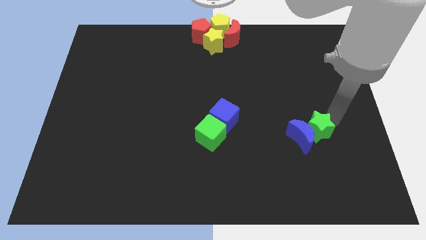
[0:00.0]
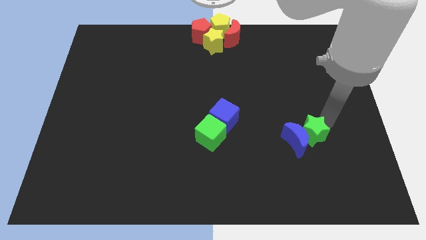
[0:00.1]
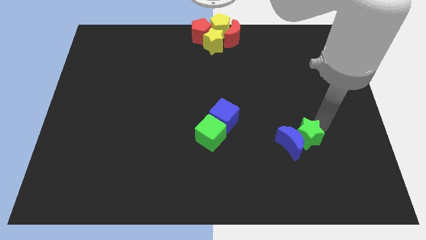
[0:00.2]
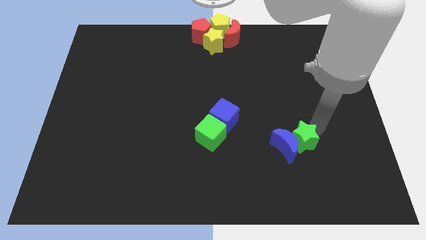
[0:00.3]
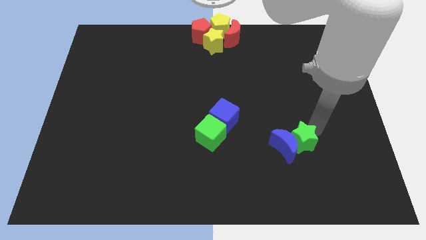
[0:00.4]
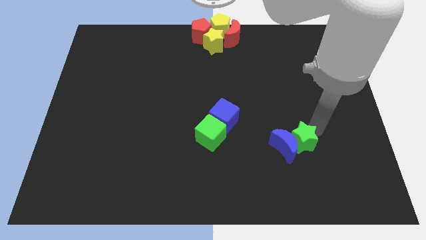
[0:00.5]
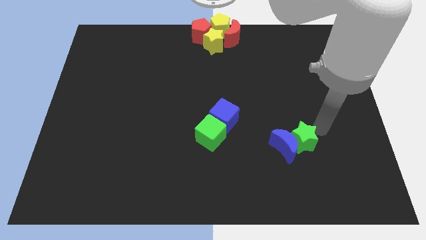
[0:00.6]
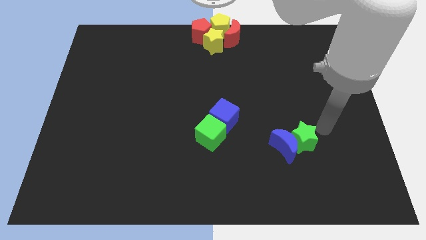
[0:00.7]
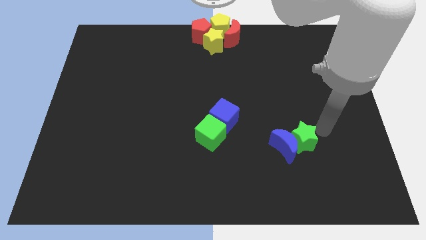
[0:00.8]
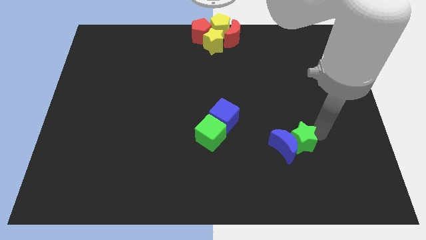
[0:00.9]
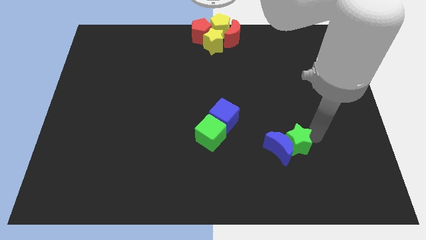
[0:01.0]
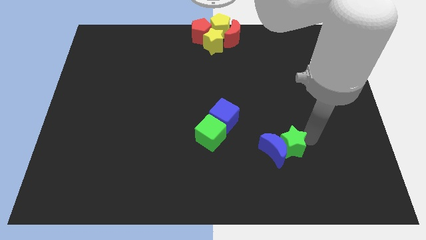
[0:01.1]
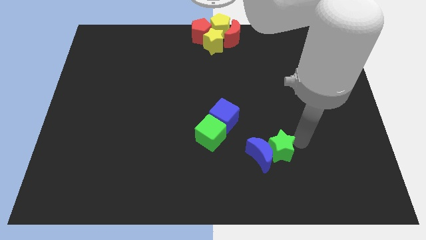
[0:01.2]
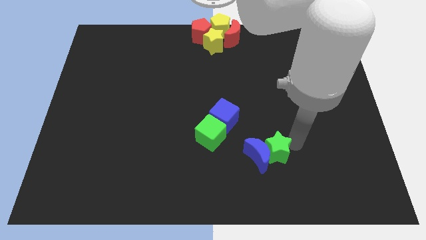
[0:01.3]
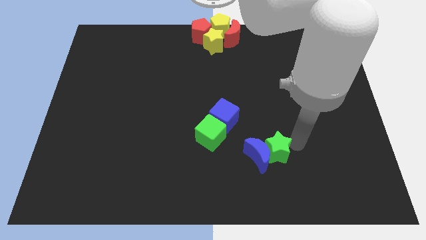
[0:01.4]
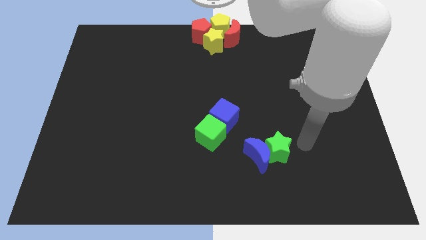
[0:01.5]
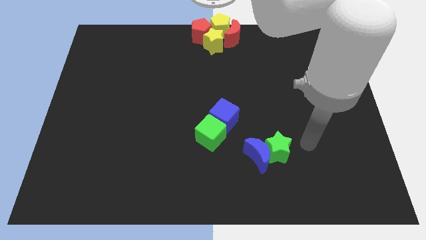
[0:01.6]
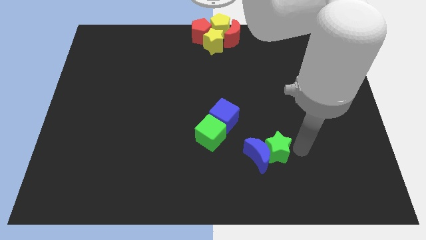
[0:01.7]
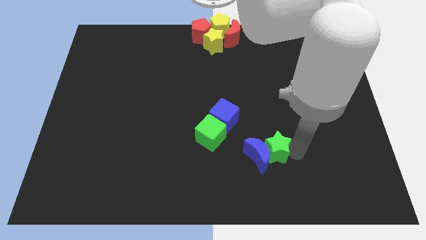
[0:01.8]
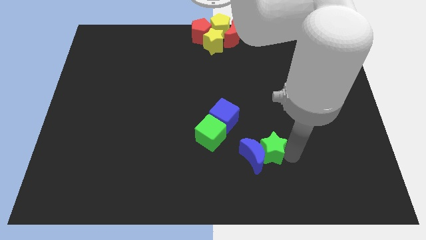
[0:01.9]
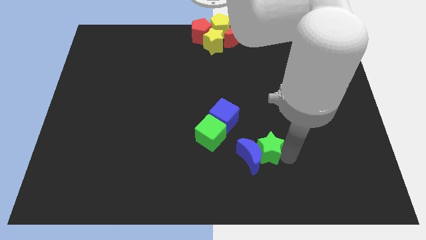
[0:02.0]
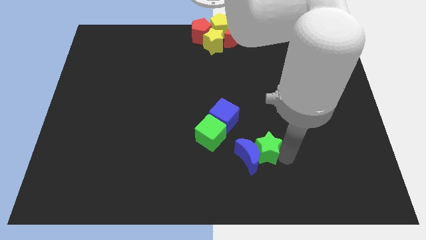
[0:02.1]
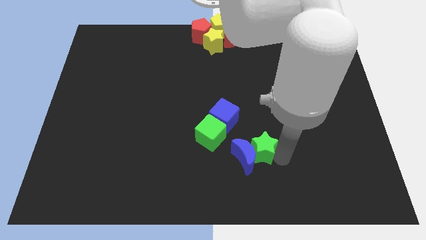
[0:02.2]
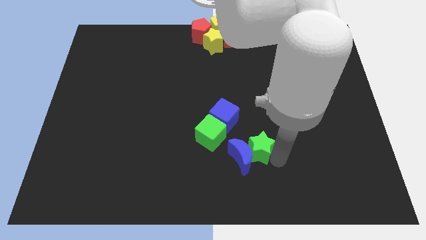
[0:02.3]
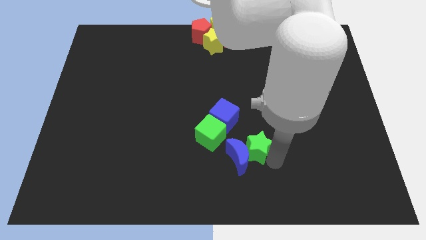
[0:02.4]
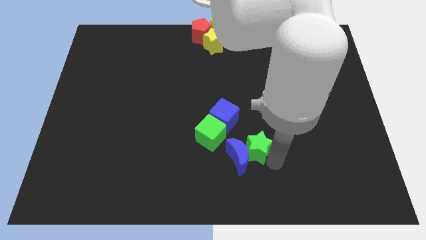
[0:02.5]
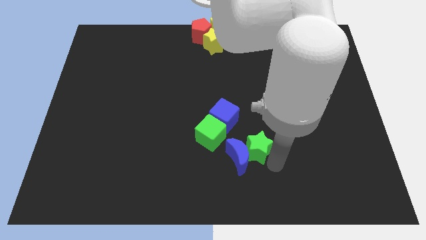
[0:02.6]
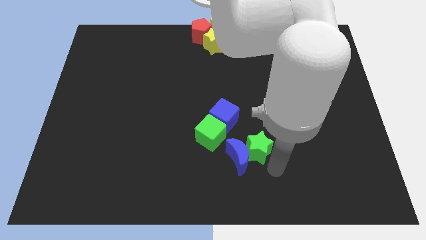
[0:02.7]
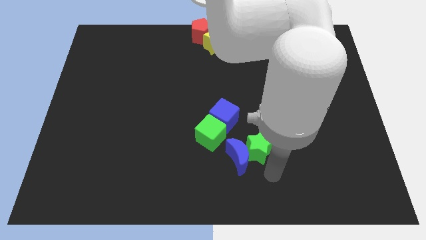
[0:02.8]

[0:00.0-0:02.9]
move the blue moon and green star diagonally towards bottom

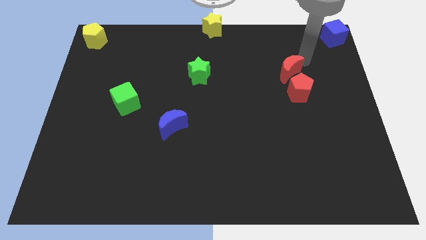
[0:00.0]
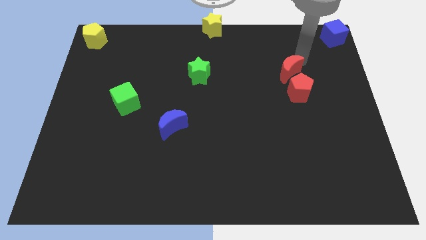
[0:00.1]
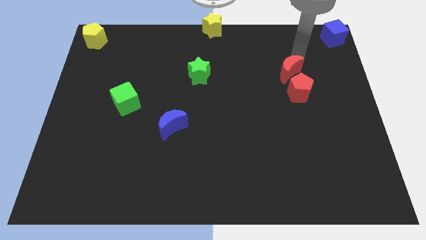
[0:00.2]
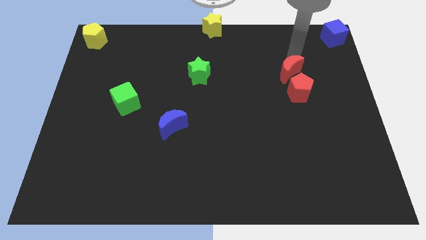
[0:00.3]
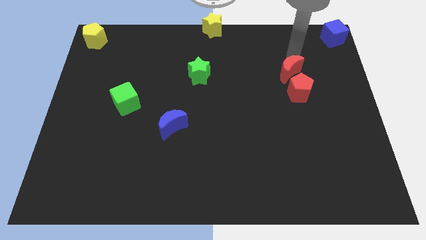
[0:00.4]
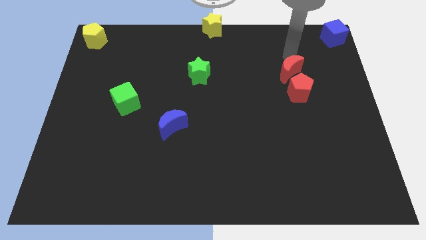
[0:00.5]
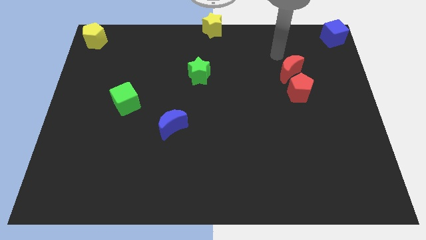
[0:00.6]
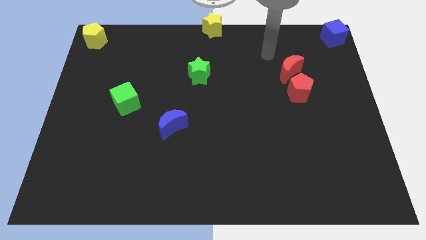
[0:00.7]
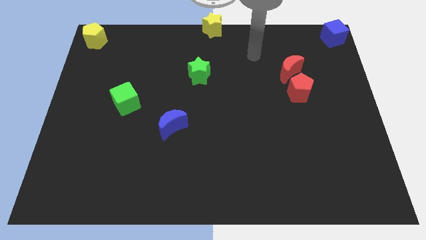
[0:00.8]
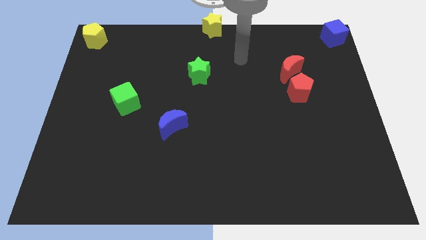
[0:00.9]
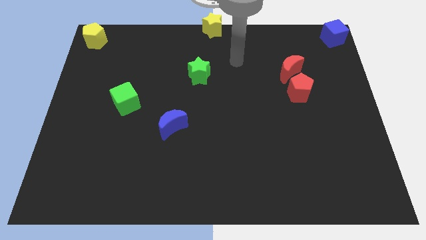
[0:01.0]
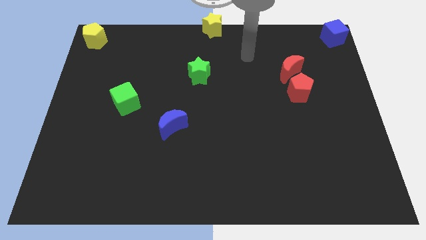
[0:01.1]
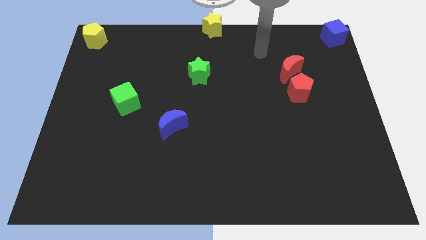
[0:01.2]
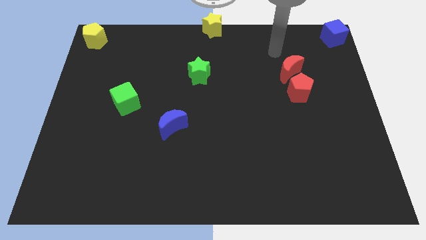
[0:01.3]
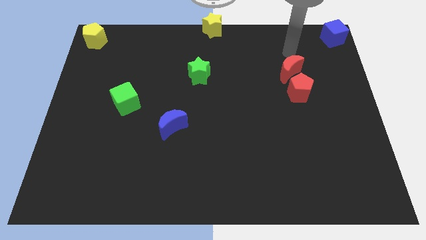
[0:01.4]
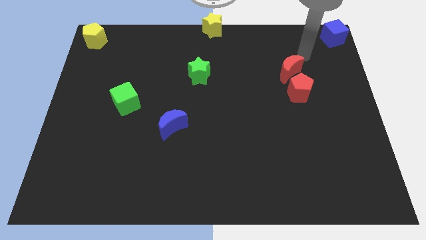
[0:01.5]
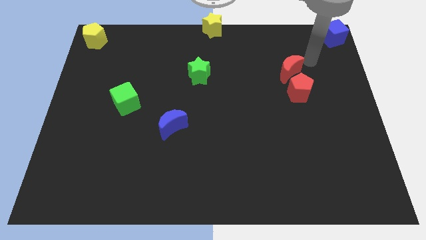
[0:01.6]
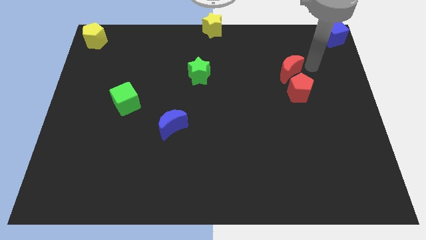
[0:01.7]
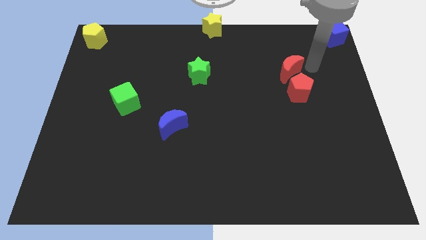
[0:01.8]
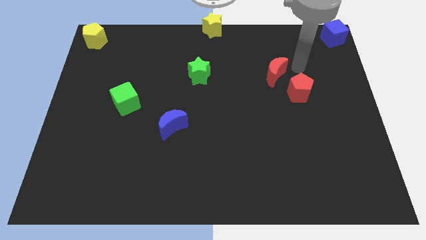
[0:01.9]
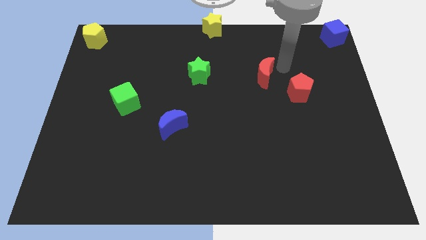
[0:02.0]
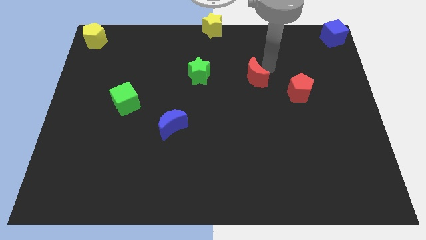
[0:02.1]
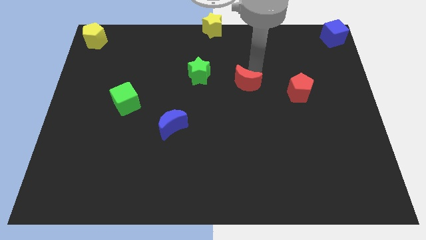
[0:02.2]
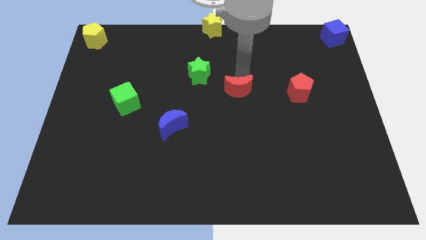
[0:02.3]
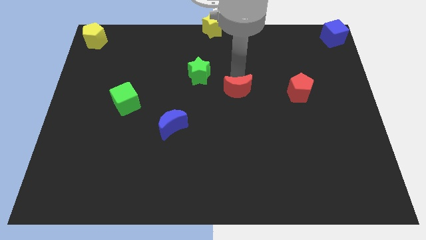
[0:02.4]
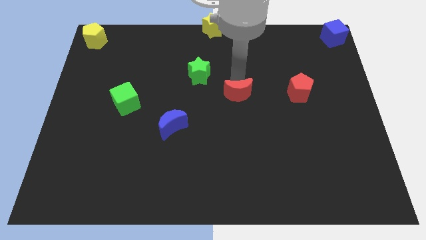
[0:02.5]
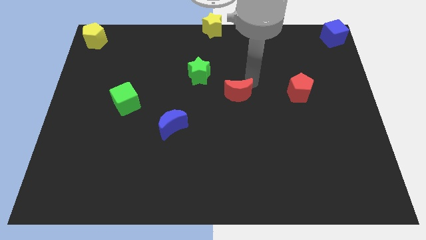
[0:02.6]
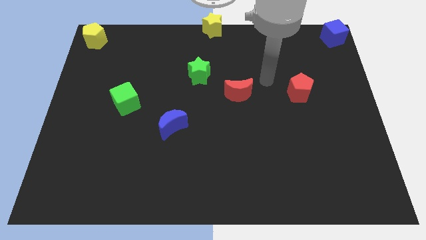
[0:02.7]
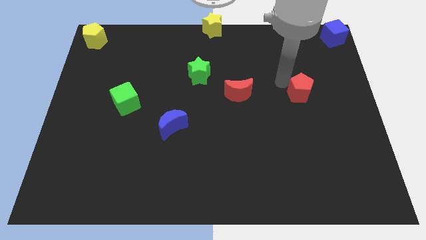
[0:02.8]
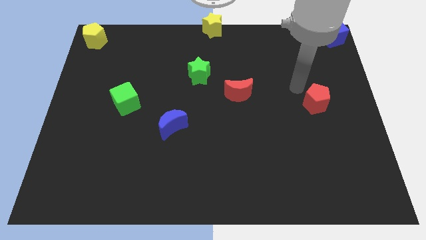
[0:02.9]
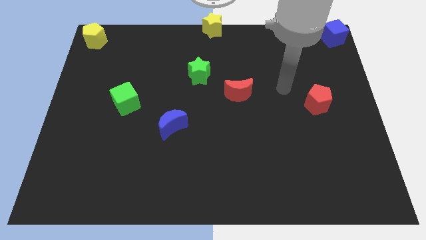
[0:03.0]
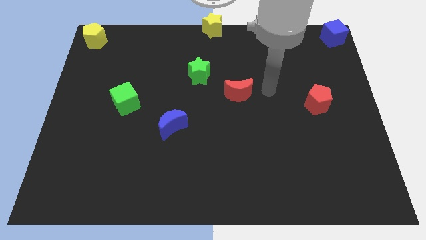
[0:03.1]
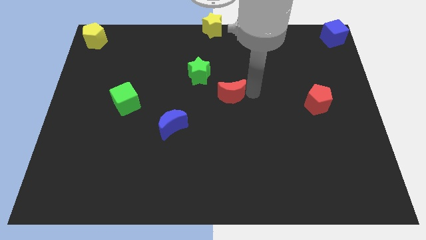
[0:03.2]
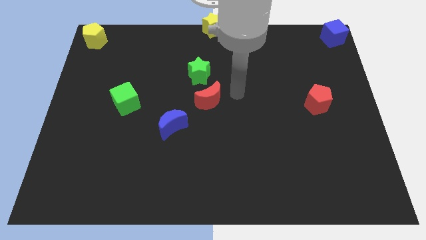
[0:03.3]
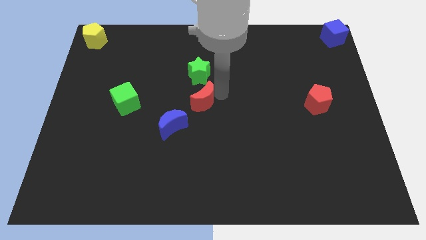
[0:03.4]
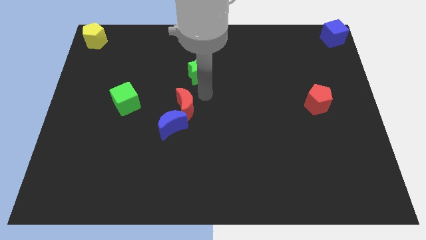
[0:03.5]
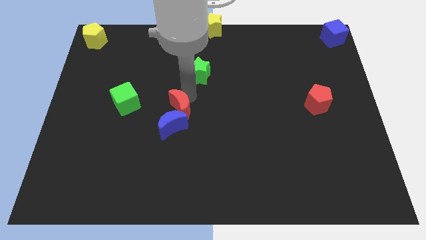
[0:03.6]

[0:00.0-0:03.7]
separate the red moon from the red pentagon

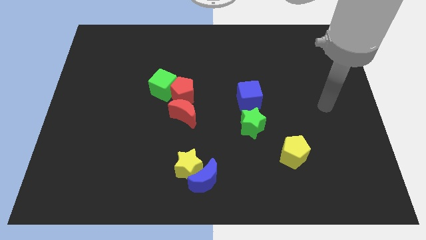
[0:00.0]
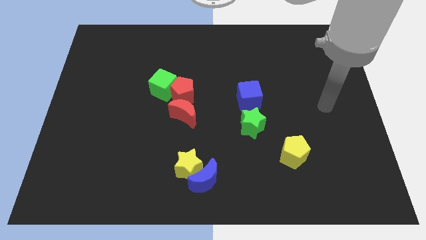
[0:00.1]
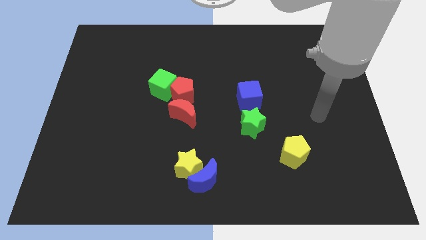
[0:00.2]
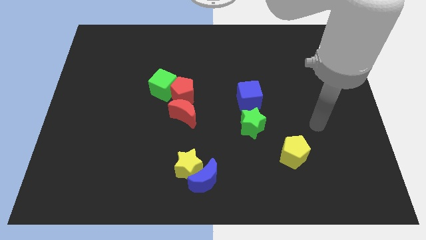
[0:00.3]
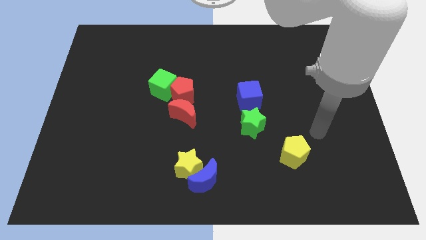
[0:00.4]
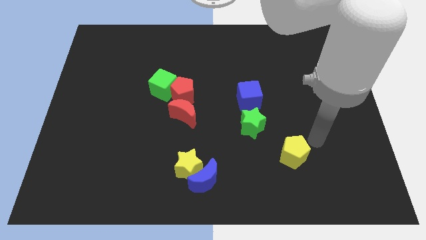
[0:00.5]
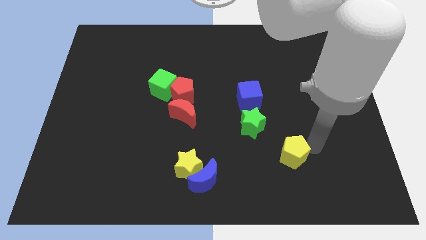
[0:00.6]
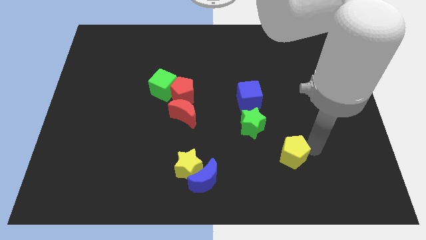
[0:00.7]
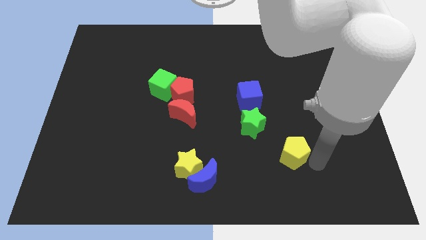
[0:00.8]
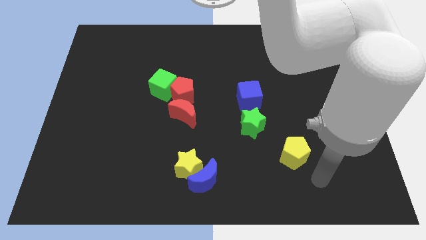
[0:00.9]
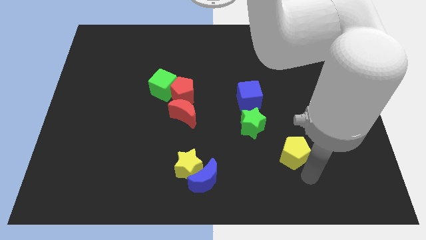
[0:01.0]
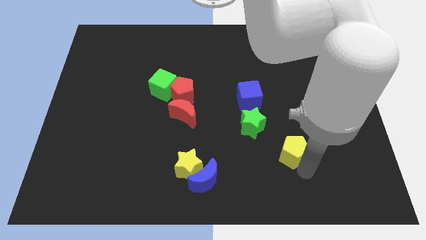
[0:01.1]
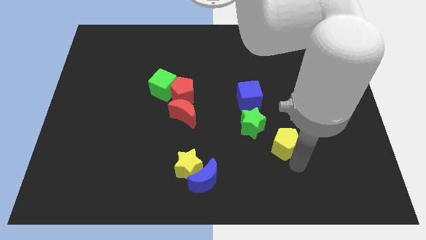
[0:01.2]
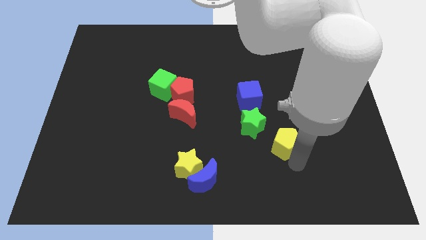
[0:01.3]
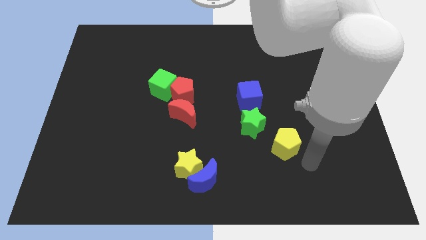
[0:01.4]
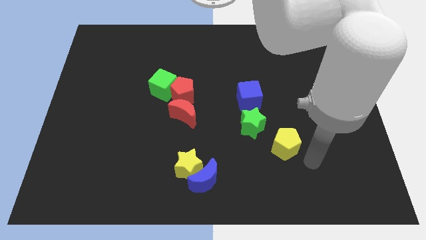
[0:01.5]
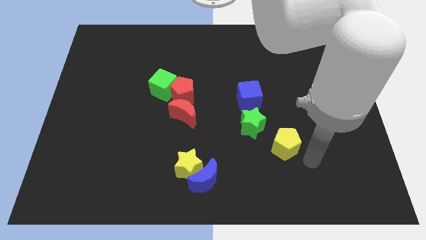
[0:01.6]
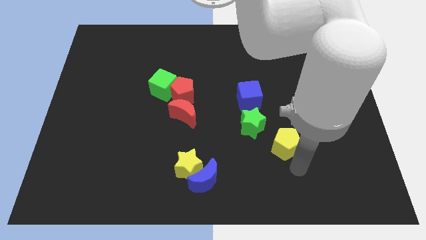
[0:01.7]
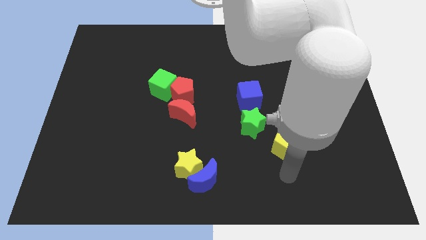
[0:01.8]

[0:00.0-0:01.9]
move your arm at the bottom of the yellow pentagon

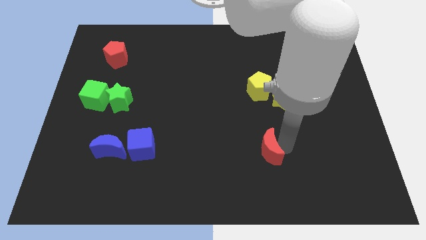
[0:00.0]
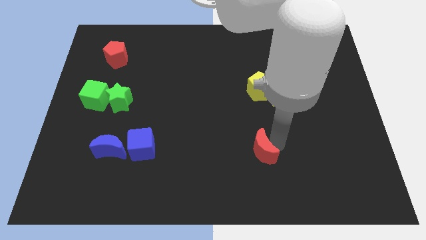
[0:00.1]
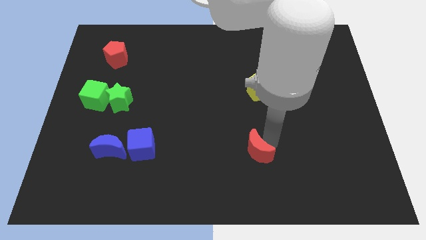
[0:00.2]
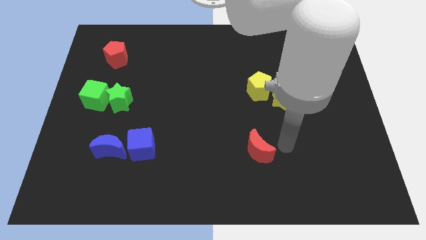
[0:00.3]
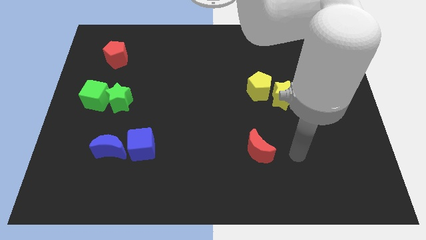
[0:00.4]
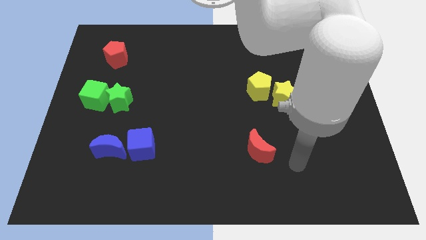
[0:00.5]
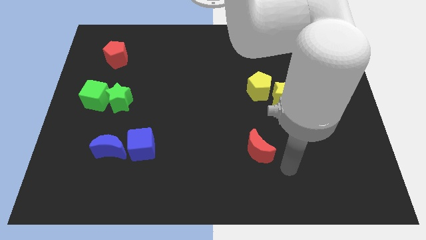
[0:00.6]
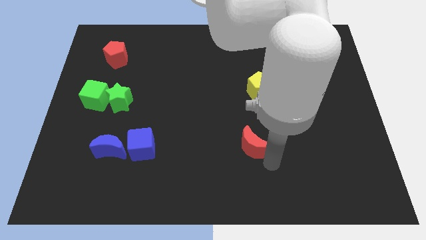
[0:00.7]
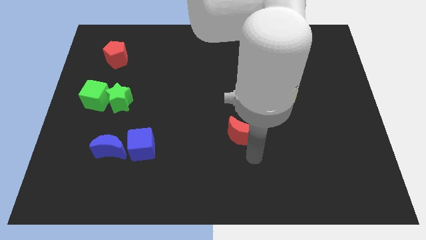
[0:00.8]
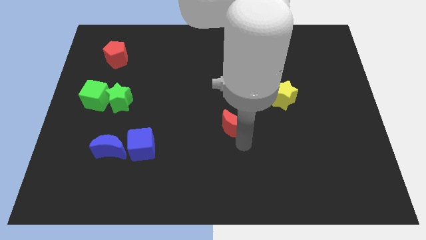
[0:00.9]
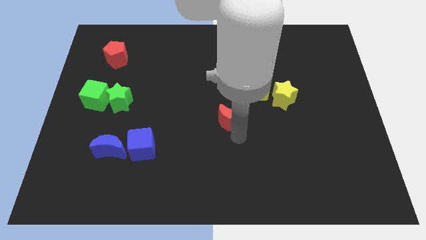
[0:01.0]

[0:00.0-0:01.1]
place the red moon diagonally bottom left to the yellow pentagon
